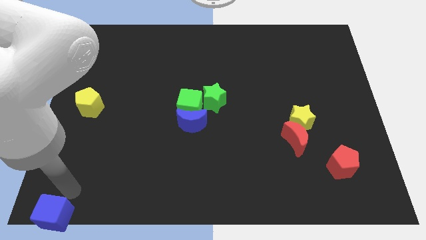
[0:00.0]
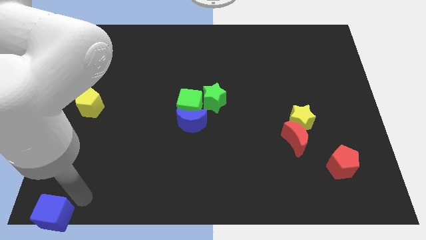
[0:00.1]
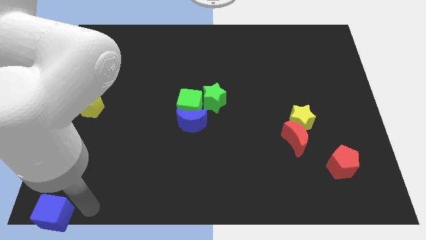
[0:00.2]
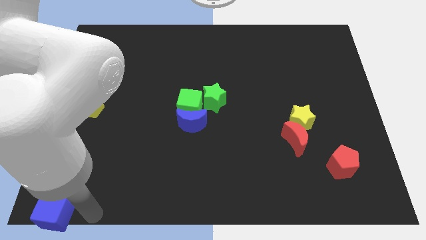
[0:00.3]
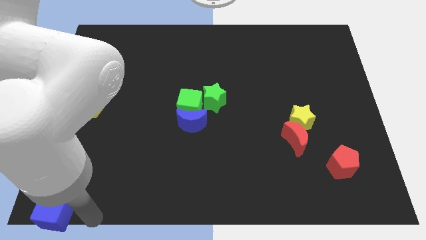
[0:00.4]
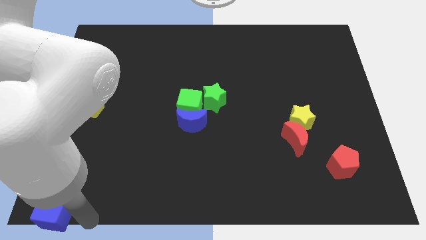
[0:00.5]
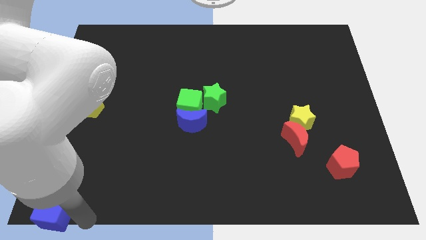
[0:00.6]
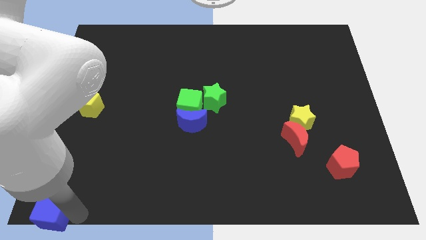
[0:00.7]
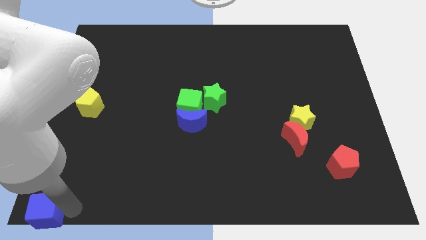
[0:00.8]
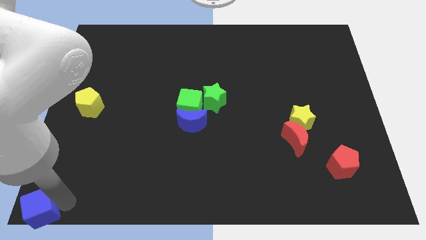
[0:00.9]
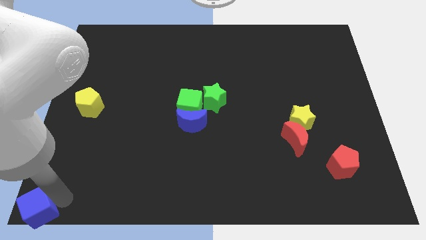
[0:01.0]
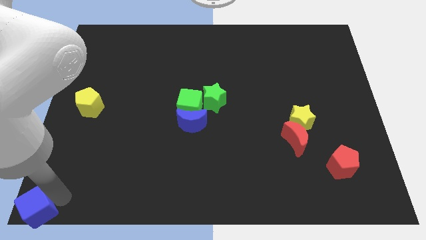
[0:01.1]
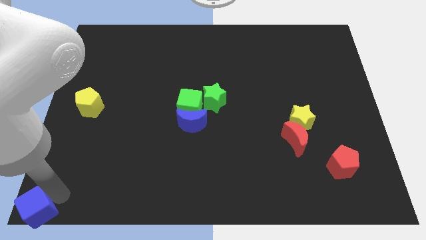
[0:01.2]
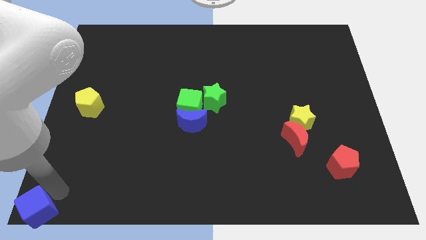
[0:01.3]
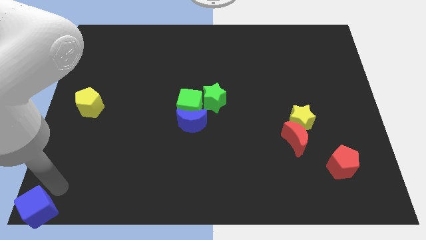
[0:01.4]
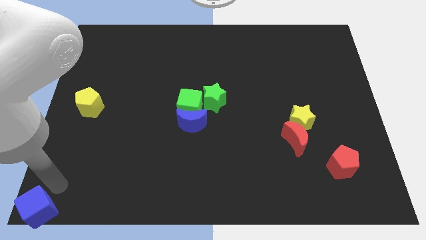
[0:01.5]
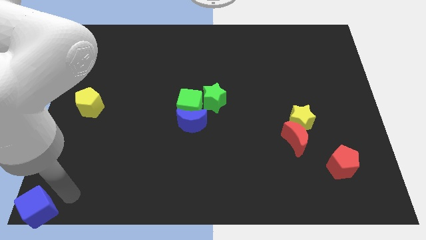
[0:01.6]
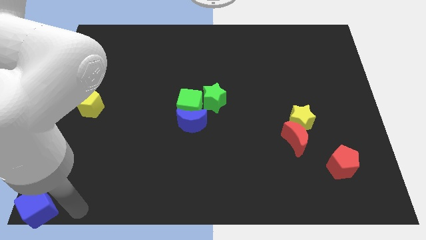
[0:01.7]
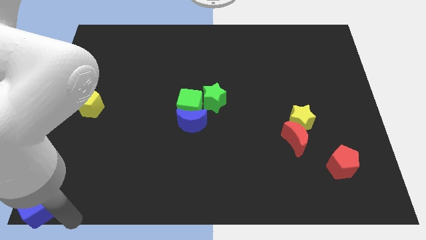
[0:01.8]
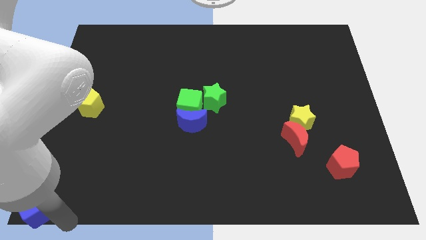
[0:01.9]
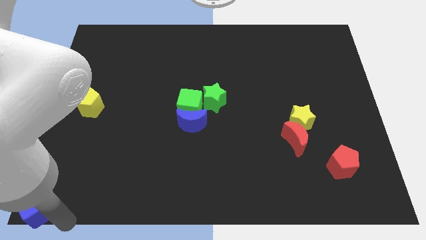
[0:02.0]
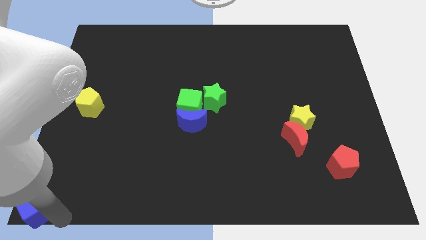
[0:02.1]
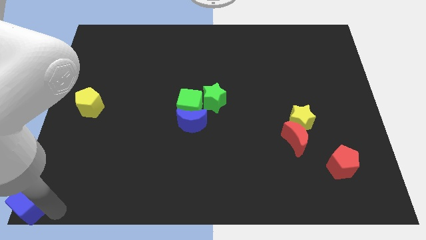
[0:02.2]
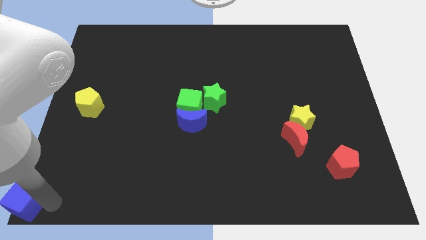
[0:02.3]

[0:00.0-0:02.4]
place blue cube towards bottom left corner

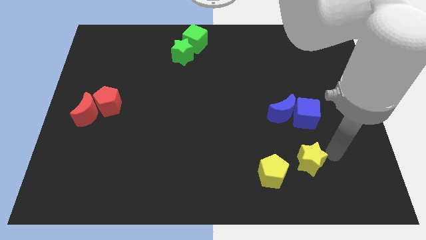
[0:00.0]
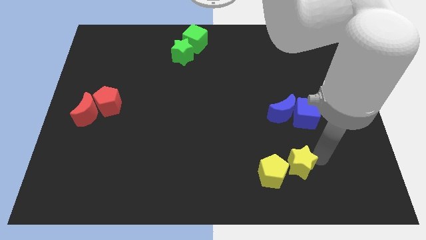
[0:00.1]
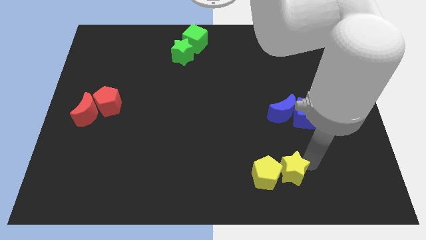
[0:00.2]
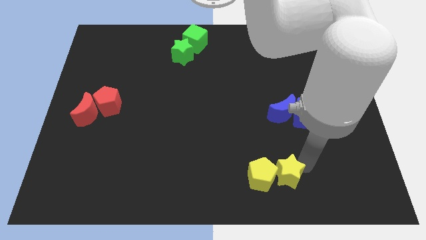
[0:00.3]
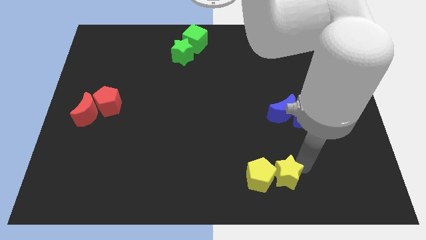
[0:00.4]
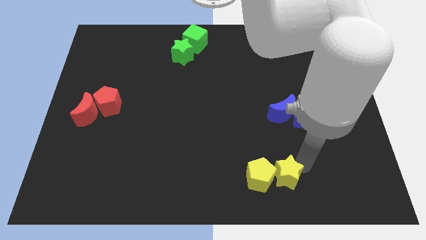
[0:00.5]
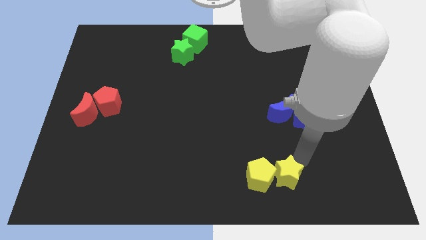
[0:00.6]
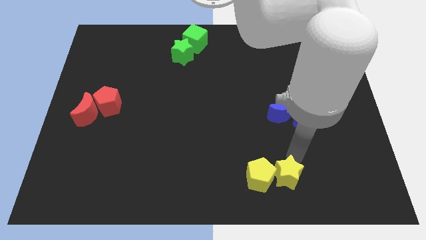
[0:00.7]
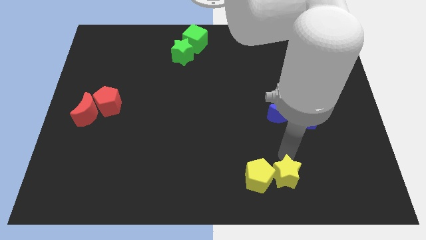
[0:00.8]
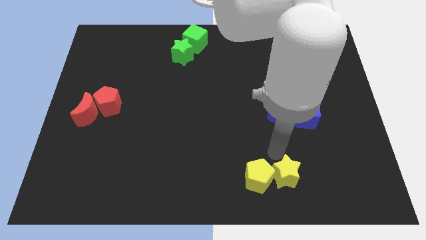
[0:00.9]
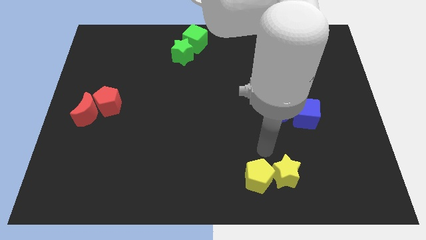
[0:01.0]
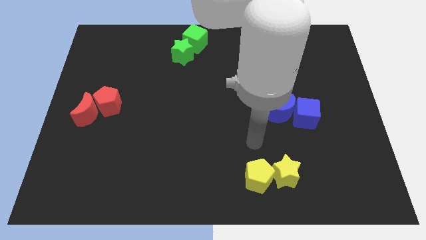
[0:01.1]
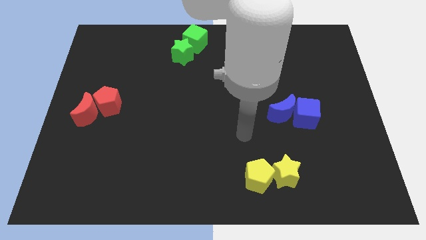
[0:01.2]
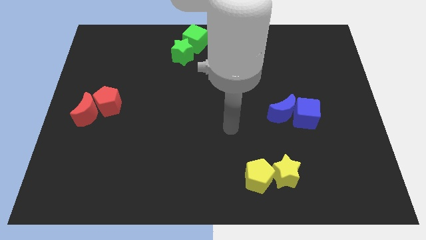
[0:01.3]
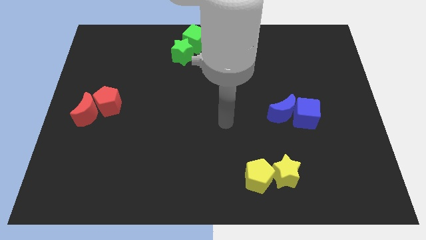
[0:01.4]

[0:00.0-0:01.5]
push the yellow star into the yellow pentagon

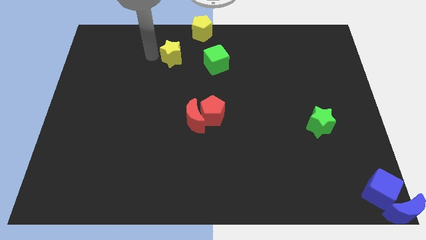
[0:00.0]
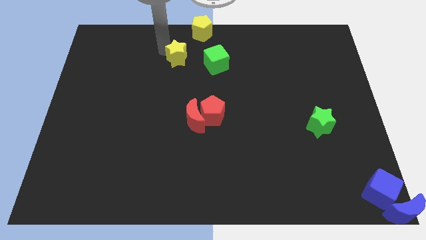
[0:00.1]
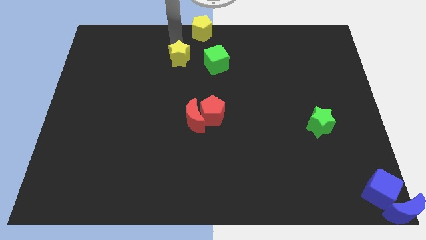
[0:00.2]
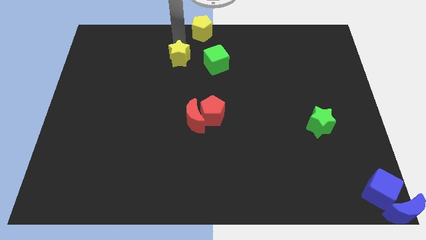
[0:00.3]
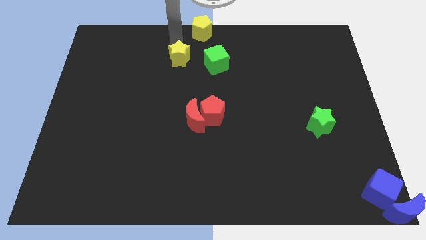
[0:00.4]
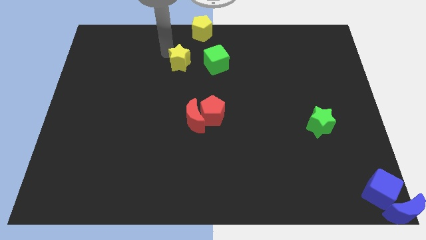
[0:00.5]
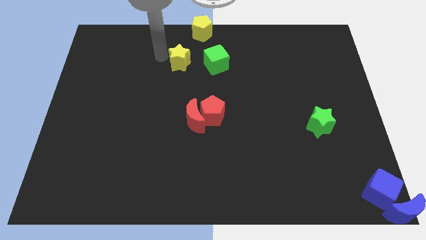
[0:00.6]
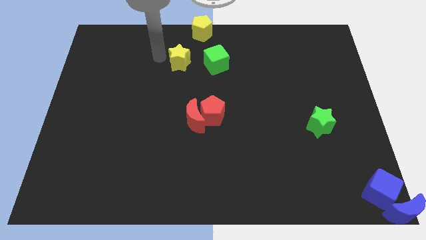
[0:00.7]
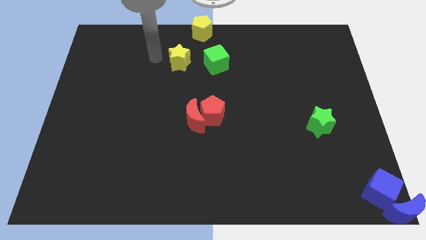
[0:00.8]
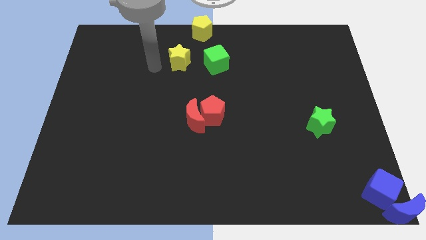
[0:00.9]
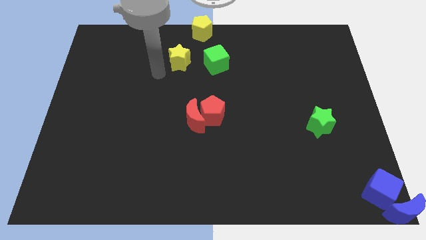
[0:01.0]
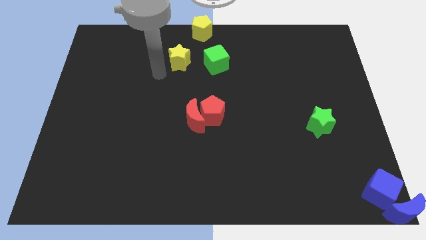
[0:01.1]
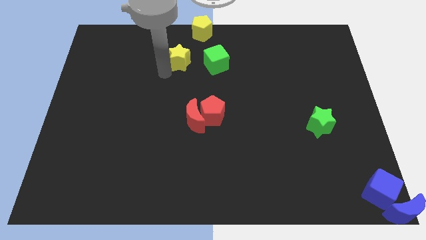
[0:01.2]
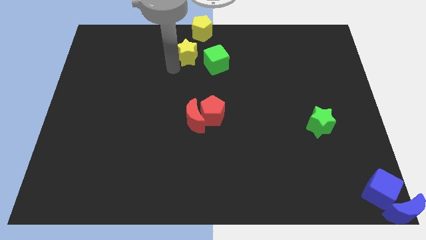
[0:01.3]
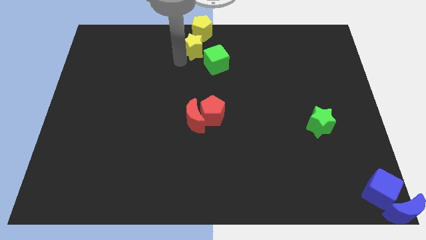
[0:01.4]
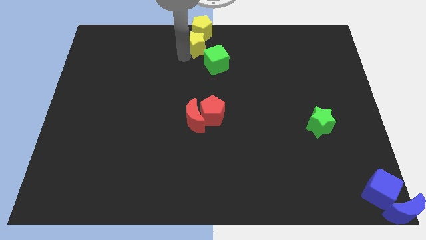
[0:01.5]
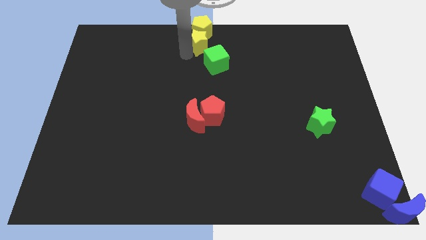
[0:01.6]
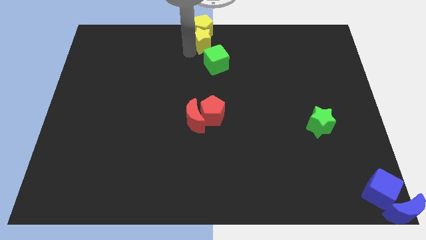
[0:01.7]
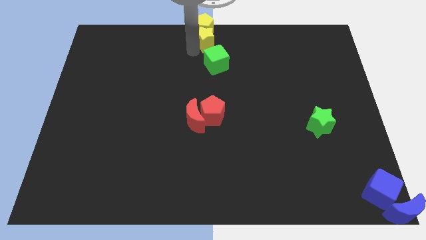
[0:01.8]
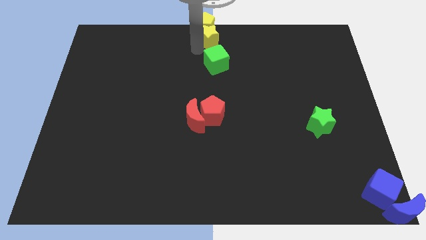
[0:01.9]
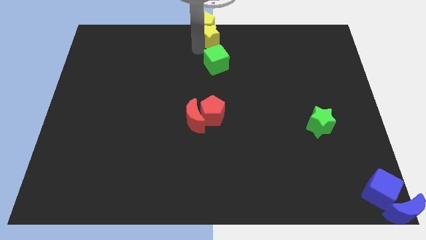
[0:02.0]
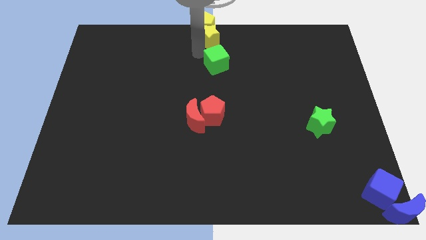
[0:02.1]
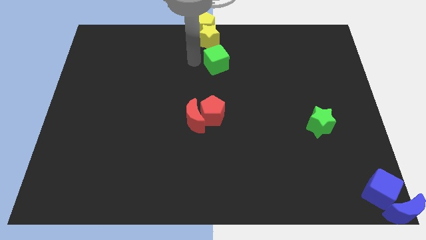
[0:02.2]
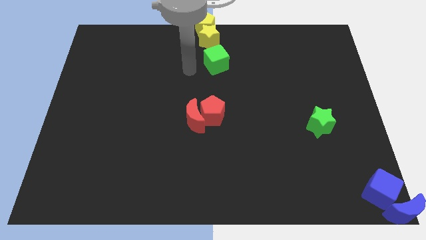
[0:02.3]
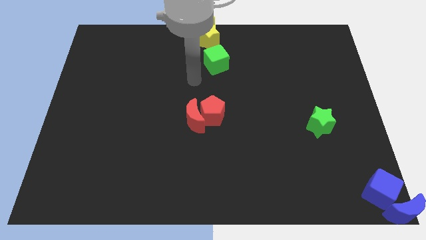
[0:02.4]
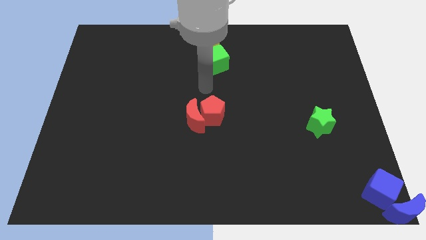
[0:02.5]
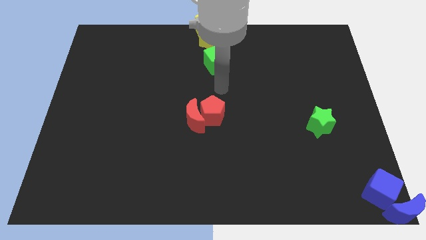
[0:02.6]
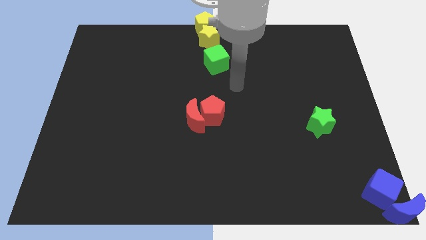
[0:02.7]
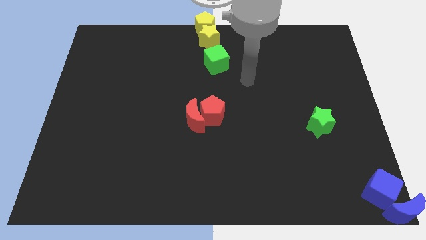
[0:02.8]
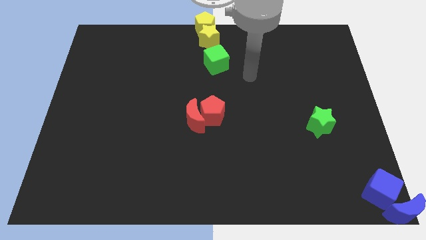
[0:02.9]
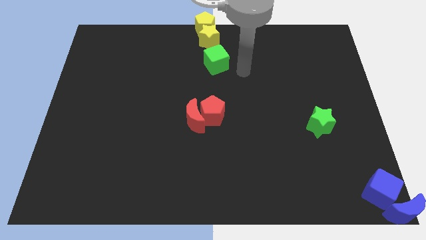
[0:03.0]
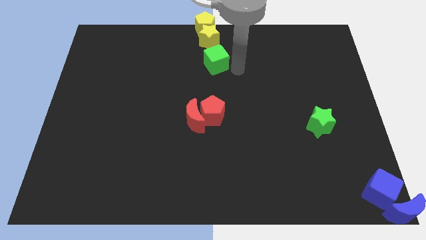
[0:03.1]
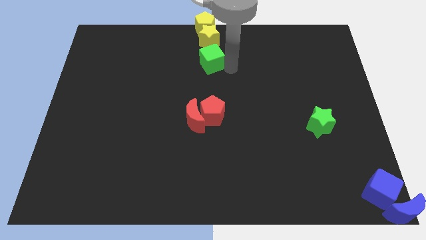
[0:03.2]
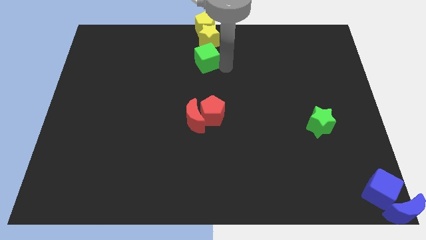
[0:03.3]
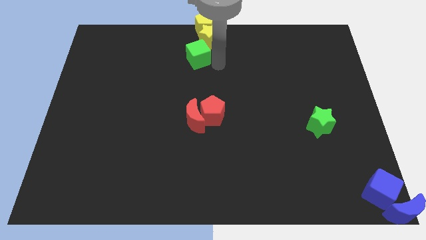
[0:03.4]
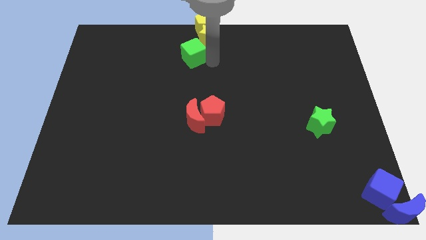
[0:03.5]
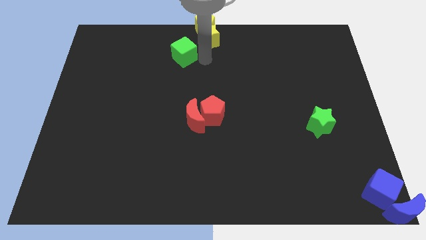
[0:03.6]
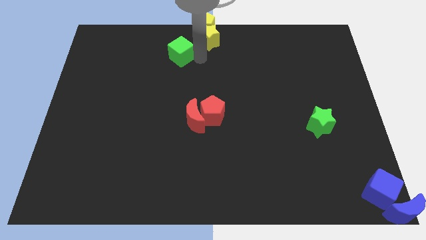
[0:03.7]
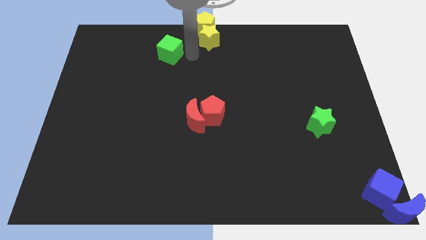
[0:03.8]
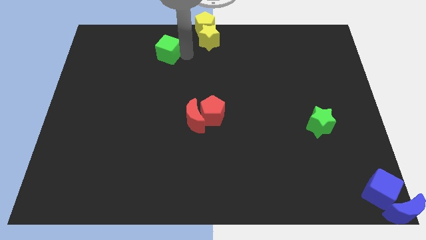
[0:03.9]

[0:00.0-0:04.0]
place the green cube left to the yellow star

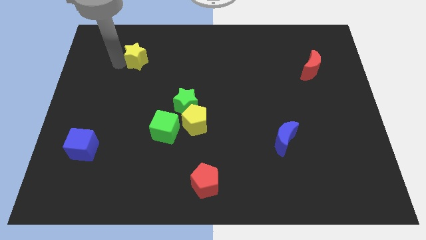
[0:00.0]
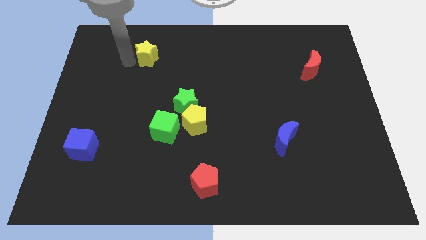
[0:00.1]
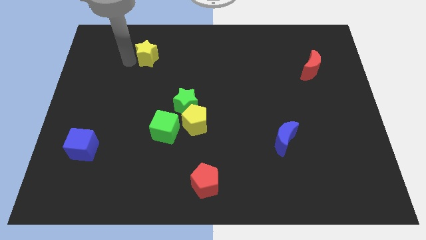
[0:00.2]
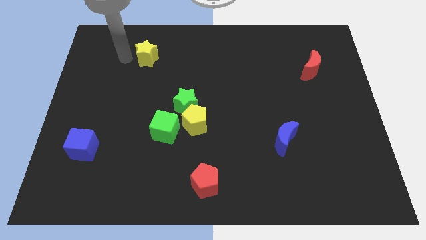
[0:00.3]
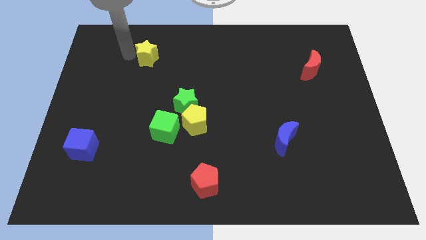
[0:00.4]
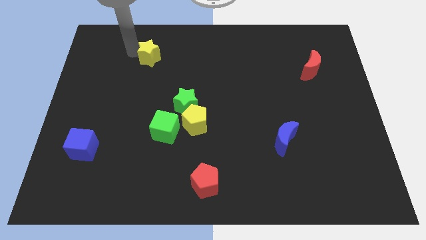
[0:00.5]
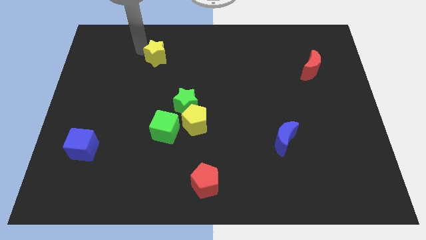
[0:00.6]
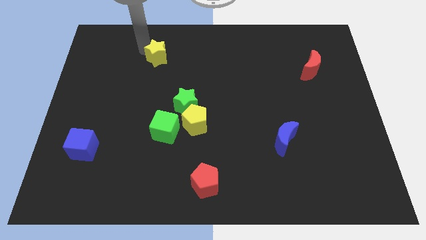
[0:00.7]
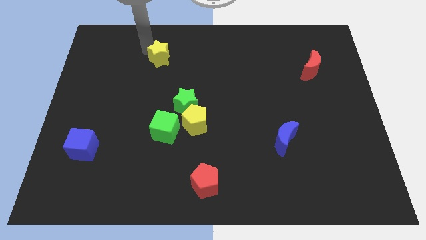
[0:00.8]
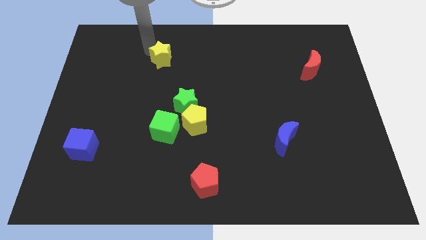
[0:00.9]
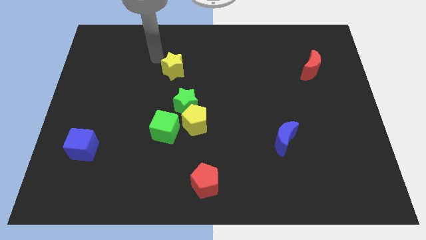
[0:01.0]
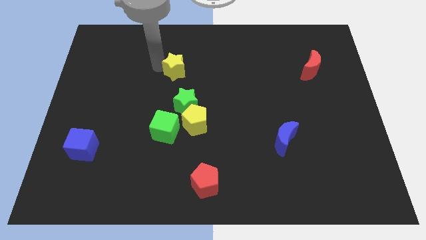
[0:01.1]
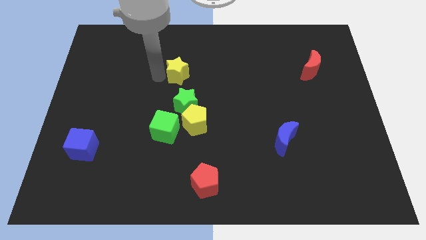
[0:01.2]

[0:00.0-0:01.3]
push yellow star to the top of green star

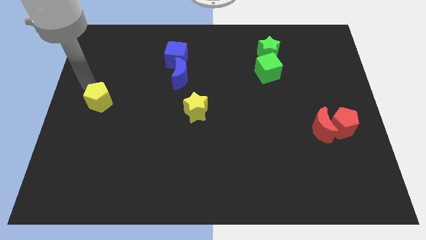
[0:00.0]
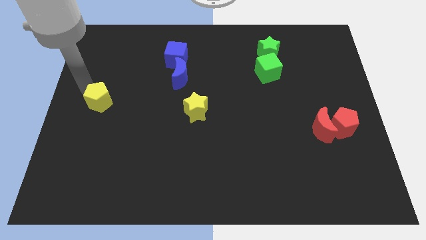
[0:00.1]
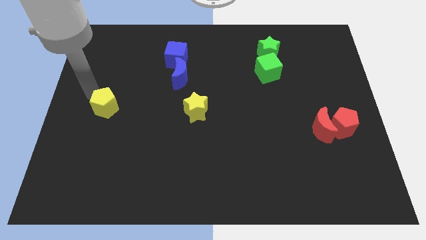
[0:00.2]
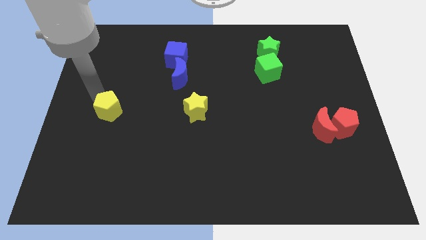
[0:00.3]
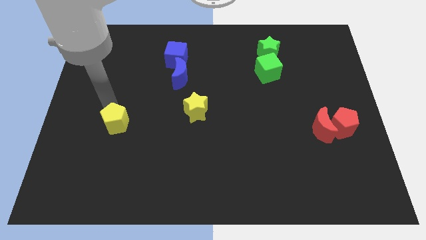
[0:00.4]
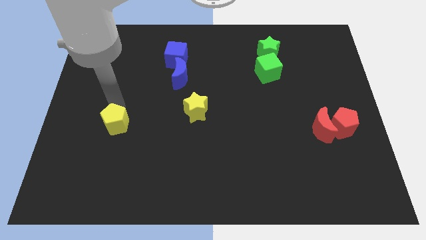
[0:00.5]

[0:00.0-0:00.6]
push yellow pentagon slightly towards downwards
